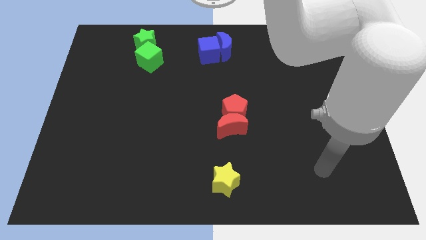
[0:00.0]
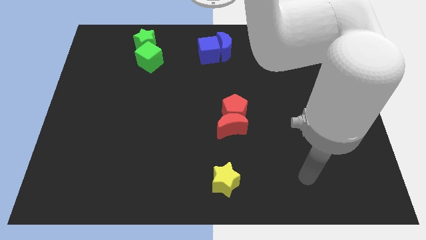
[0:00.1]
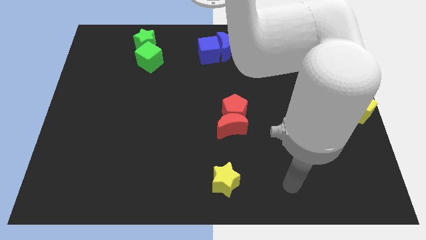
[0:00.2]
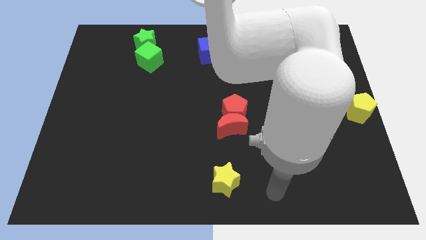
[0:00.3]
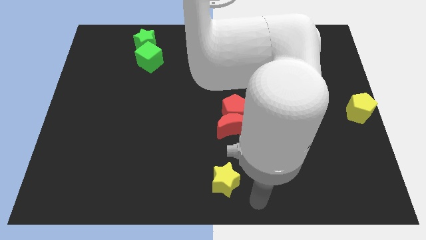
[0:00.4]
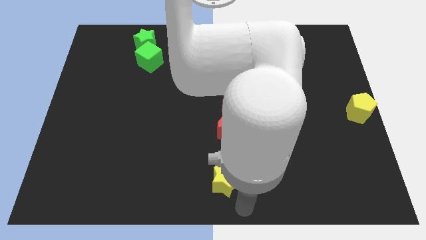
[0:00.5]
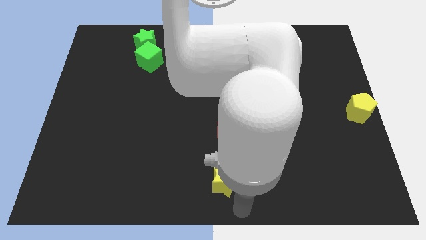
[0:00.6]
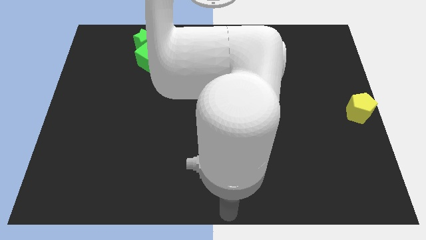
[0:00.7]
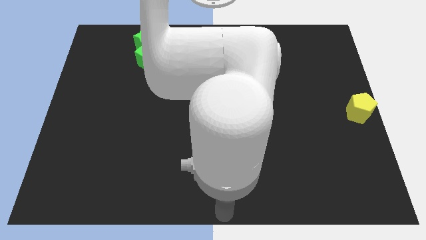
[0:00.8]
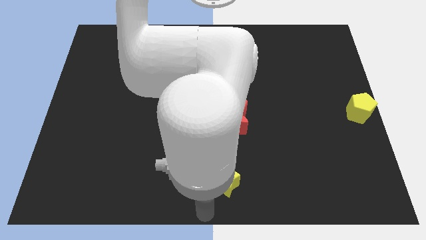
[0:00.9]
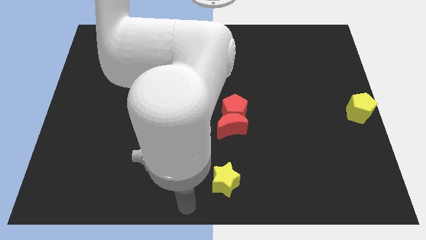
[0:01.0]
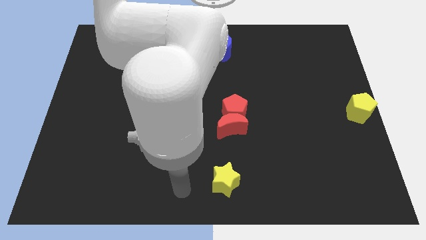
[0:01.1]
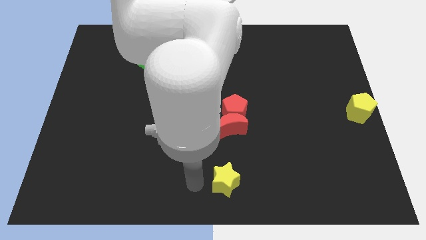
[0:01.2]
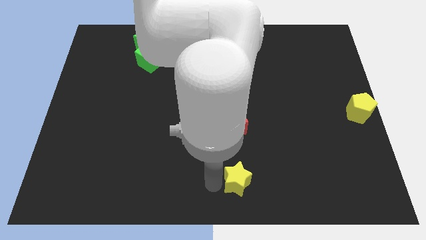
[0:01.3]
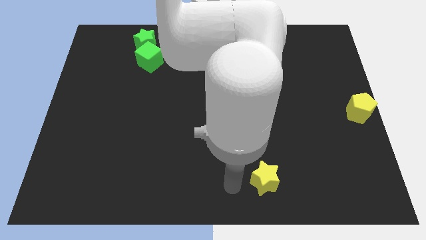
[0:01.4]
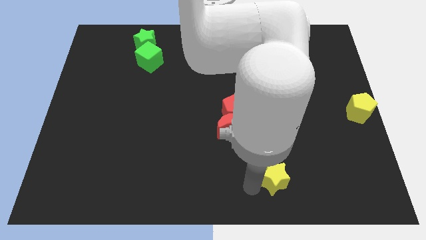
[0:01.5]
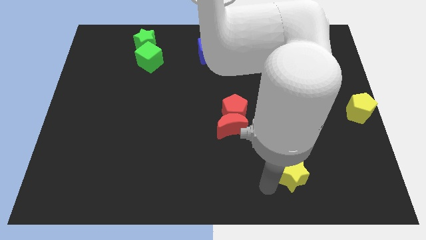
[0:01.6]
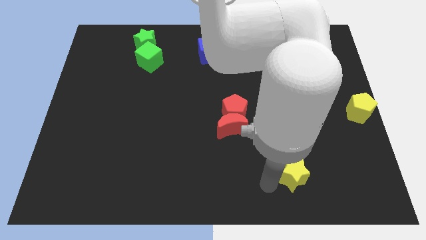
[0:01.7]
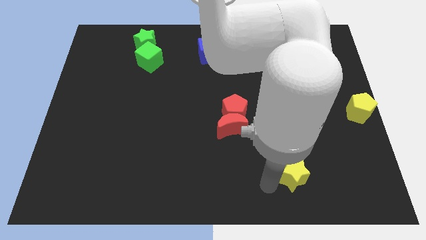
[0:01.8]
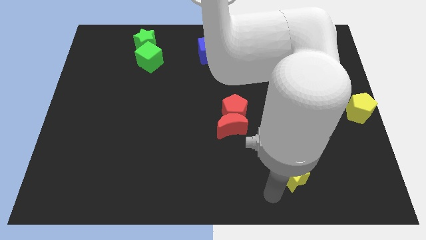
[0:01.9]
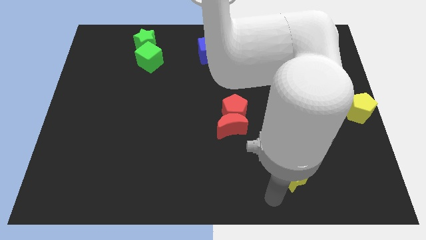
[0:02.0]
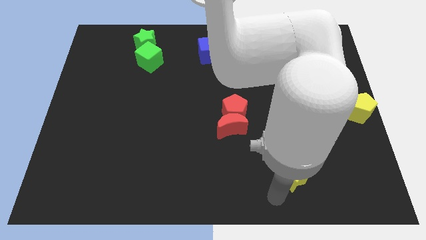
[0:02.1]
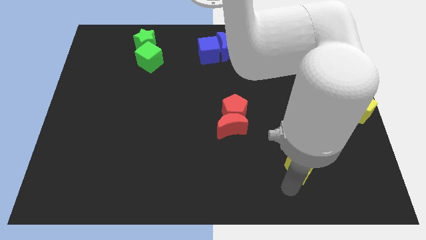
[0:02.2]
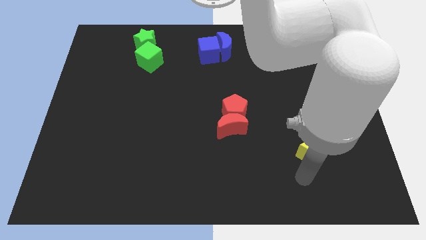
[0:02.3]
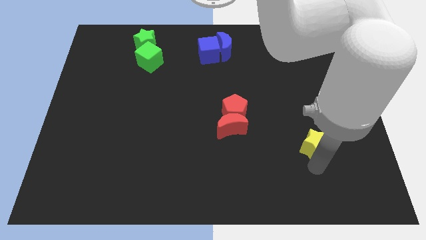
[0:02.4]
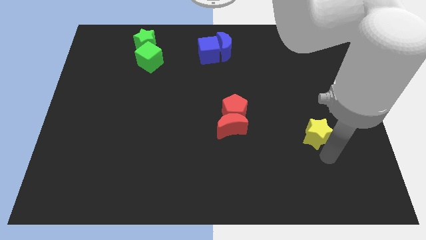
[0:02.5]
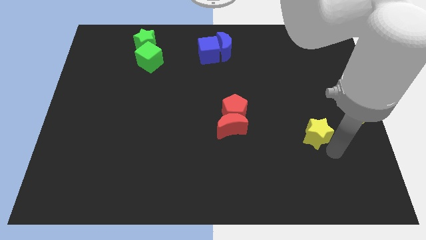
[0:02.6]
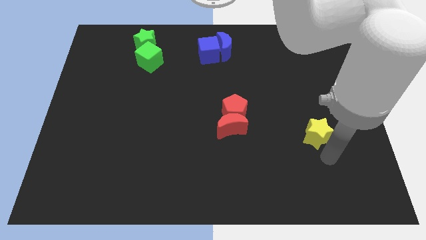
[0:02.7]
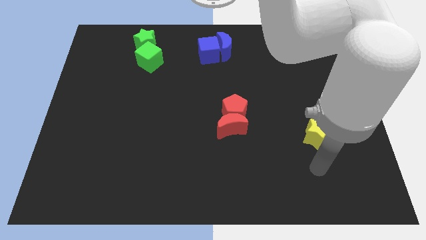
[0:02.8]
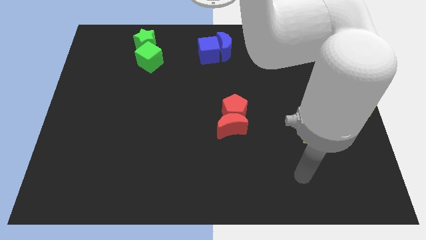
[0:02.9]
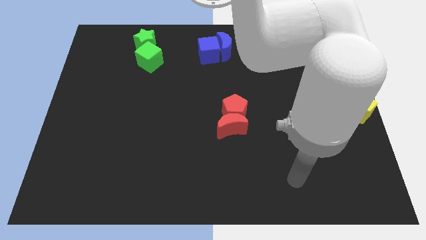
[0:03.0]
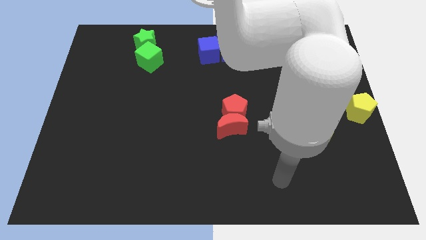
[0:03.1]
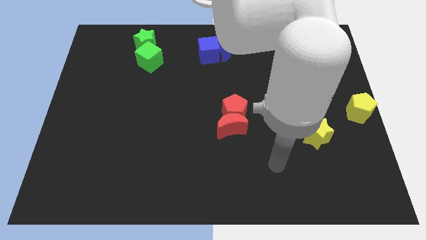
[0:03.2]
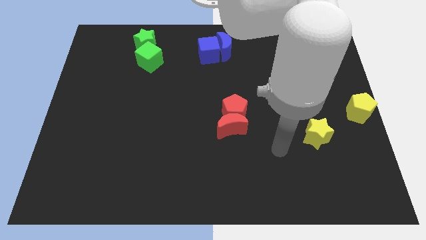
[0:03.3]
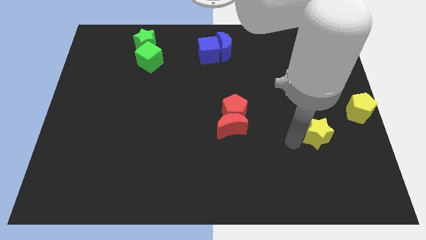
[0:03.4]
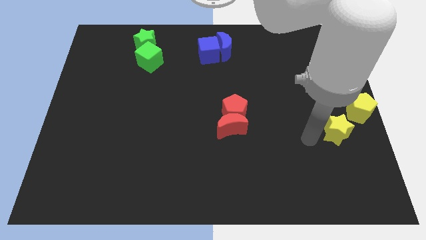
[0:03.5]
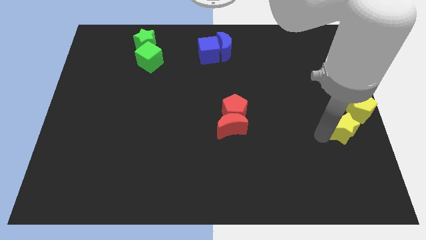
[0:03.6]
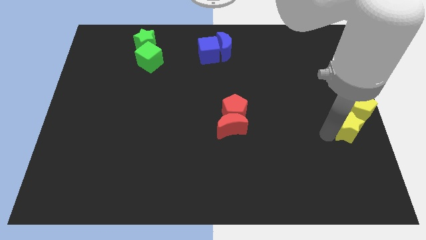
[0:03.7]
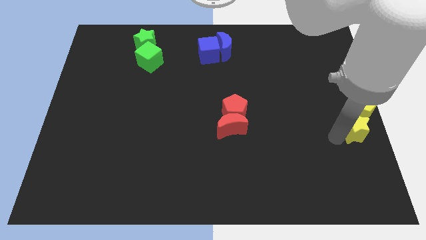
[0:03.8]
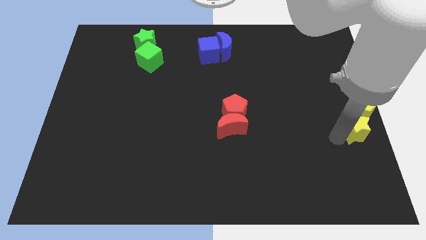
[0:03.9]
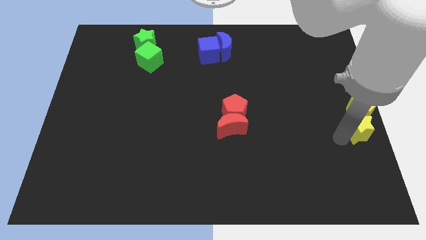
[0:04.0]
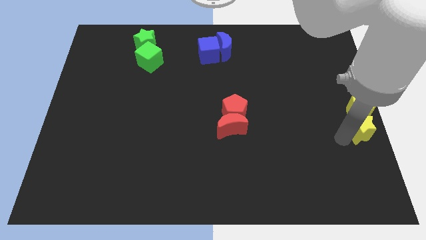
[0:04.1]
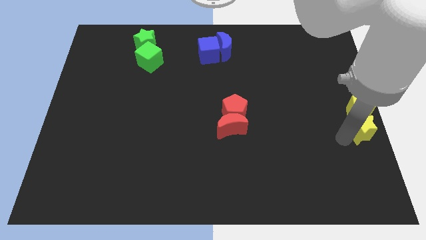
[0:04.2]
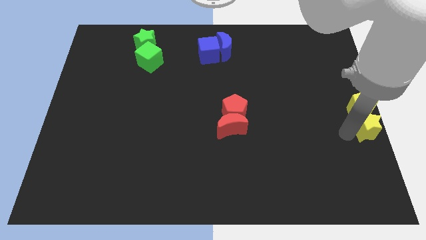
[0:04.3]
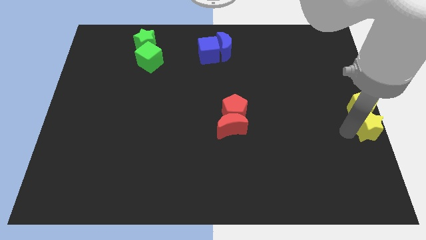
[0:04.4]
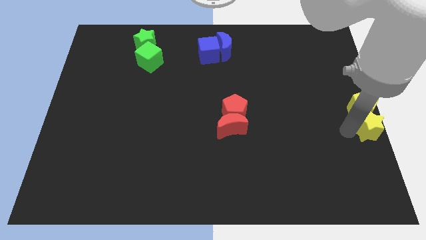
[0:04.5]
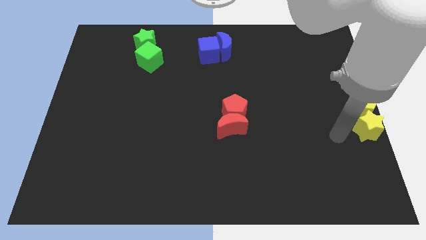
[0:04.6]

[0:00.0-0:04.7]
push the yellow star below the yellow pentagon

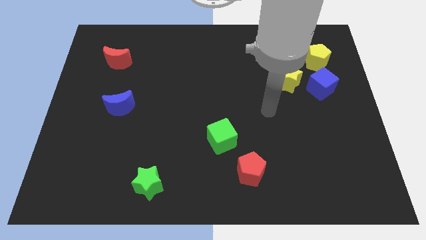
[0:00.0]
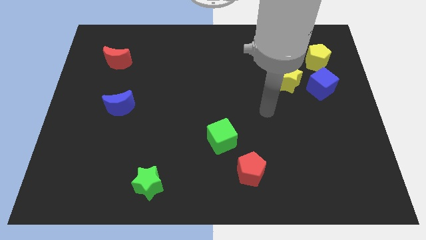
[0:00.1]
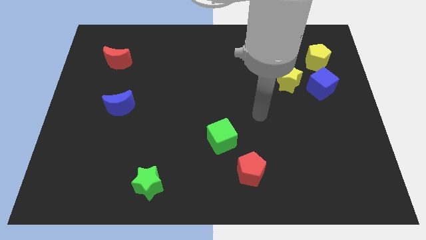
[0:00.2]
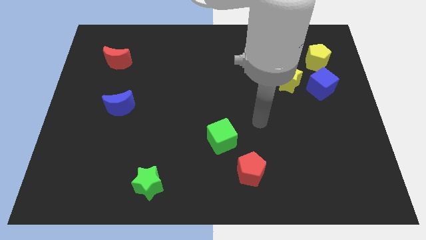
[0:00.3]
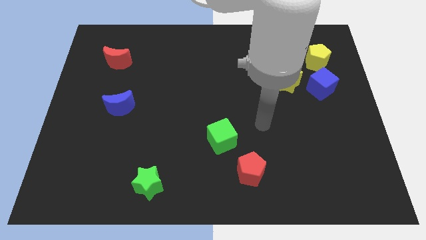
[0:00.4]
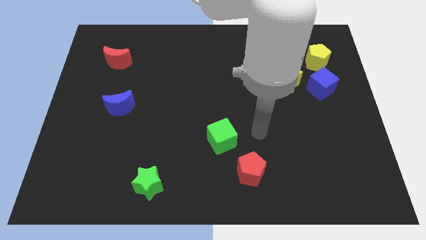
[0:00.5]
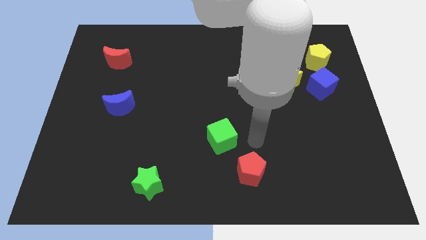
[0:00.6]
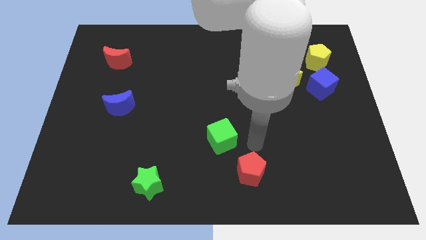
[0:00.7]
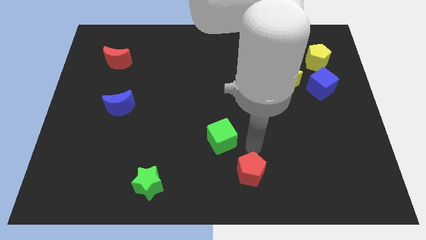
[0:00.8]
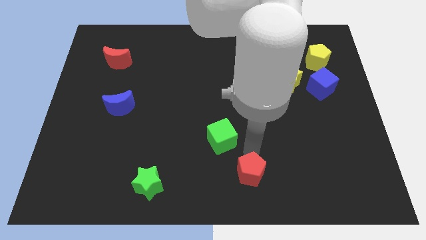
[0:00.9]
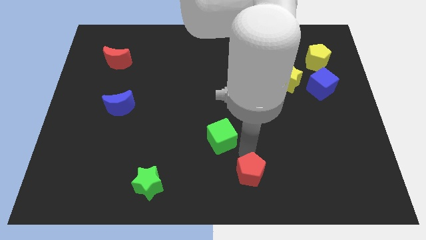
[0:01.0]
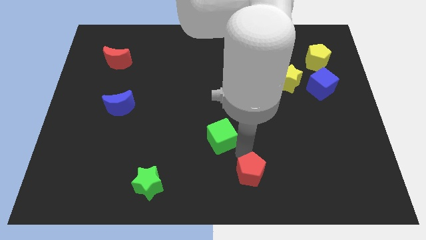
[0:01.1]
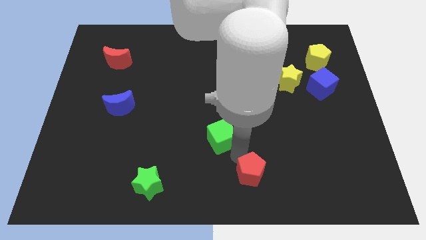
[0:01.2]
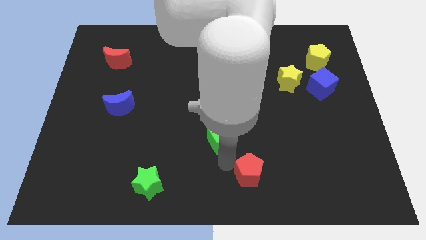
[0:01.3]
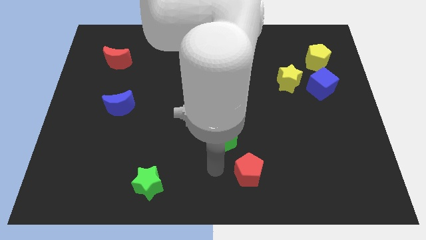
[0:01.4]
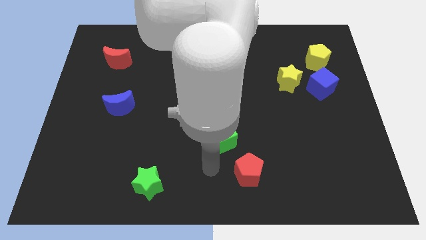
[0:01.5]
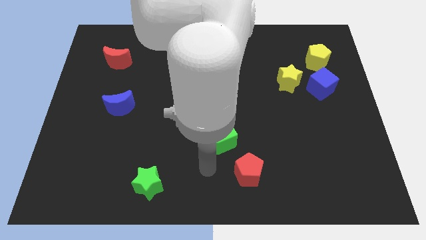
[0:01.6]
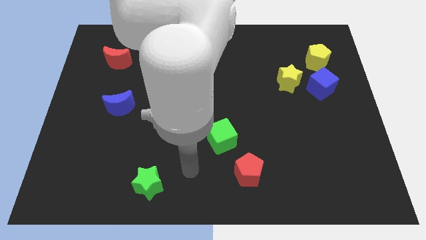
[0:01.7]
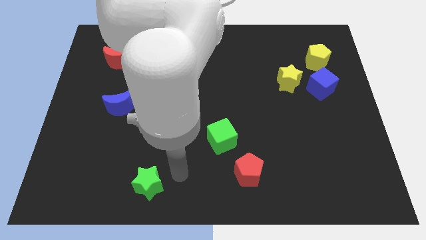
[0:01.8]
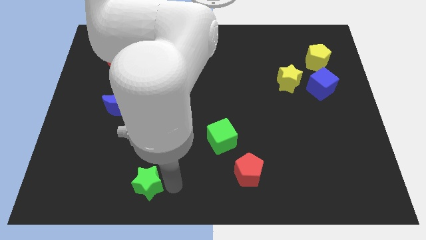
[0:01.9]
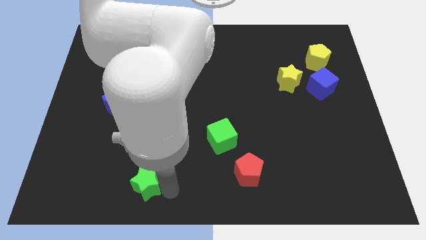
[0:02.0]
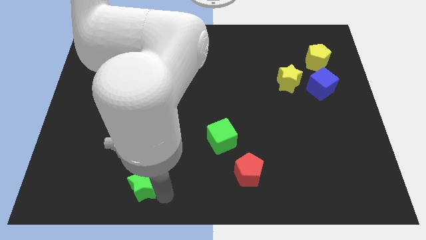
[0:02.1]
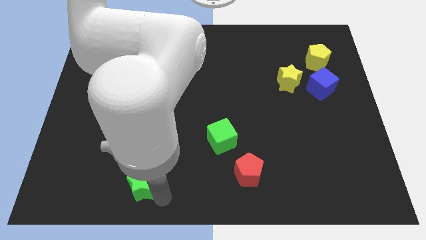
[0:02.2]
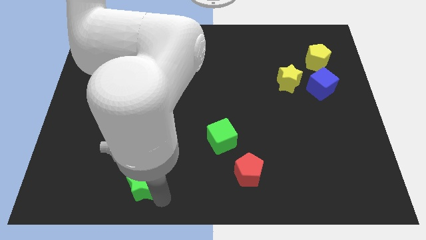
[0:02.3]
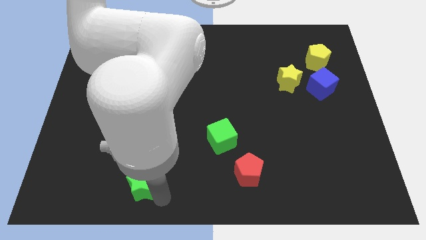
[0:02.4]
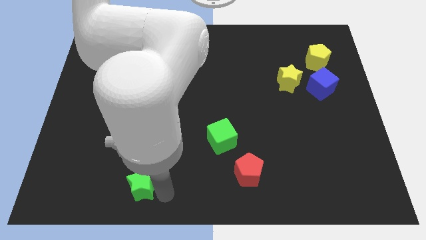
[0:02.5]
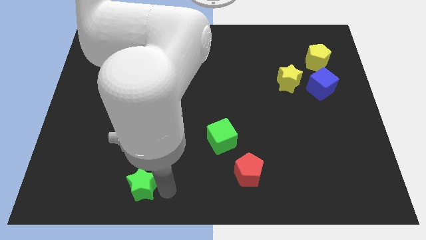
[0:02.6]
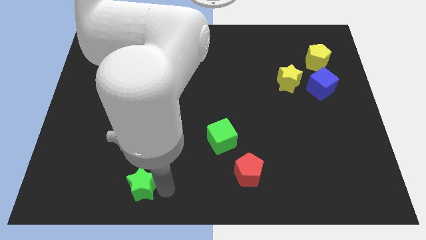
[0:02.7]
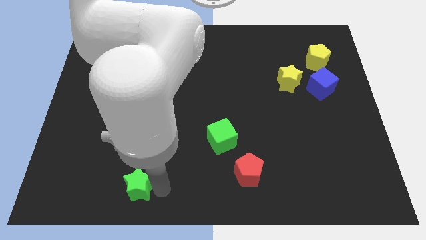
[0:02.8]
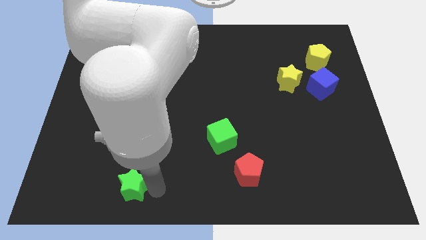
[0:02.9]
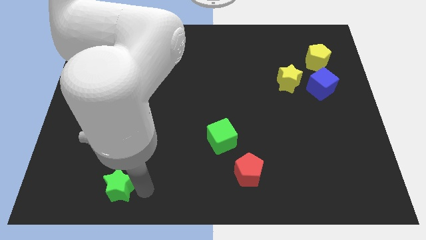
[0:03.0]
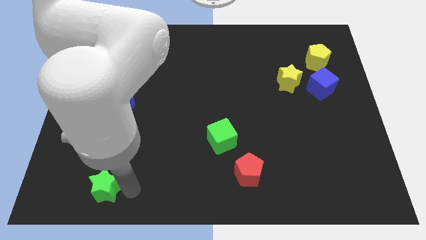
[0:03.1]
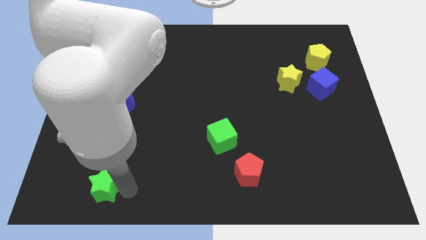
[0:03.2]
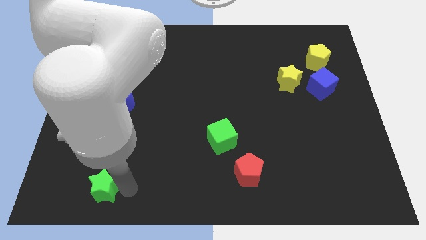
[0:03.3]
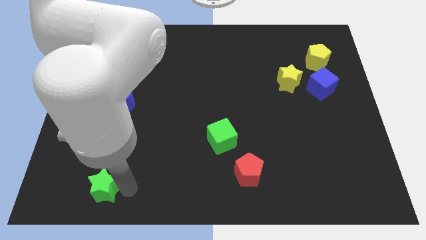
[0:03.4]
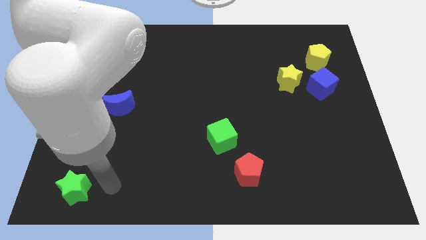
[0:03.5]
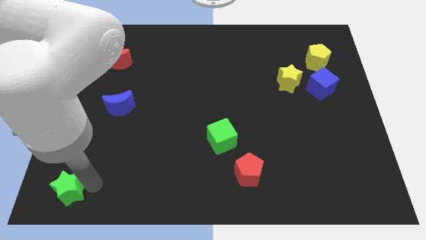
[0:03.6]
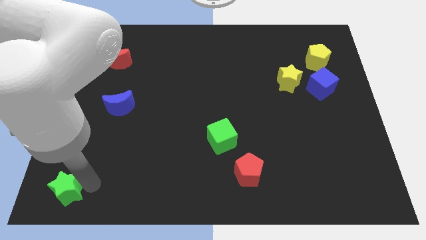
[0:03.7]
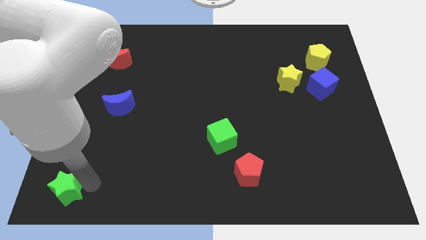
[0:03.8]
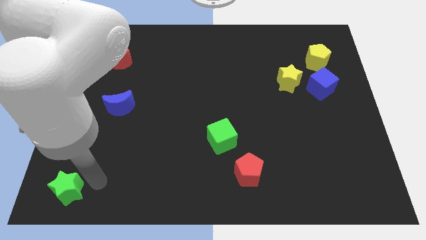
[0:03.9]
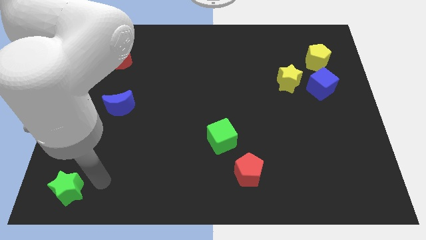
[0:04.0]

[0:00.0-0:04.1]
move the green star to the bottom left

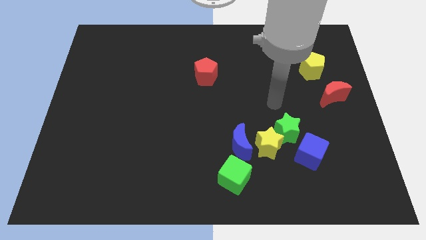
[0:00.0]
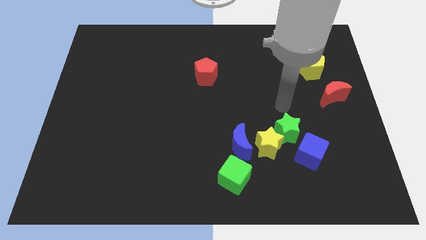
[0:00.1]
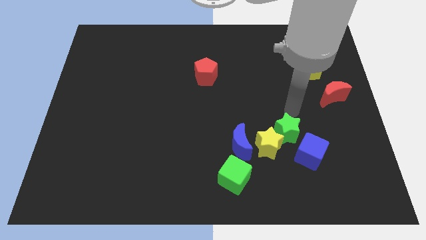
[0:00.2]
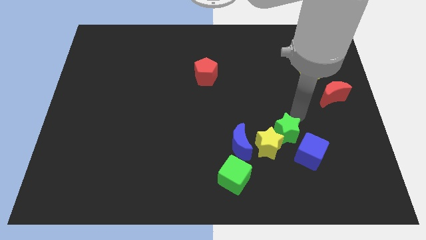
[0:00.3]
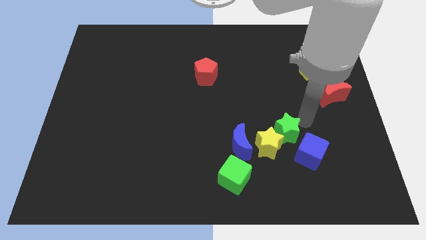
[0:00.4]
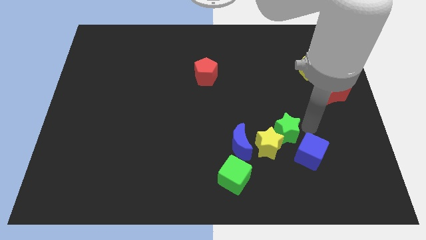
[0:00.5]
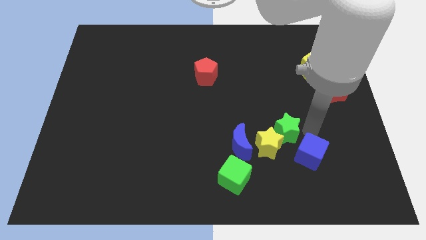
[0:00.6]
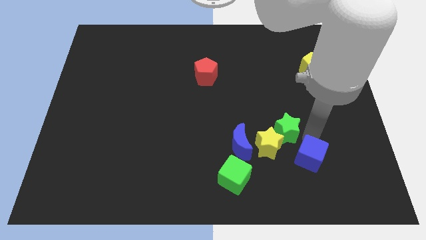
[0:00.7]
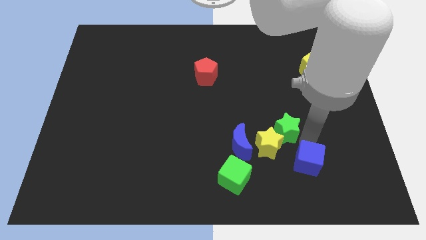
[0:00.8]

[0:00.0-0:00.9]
move the arm near the blue cube
